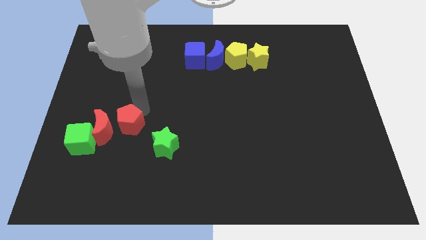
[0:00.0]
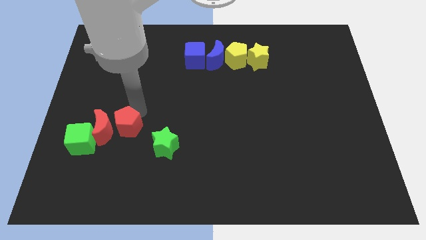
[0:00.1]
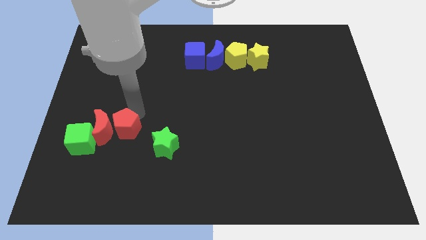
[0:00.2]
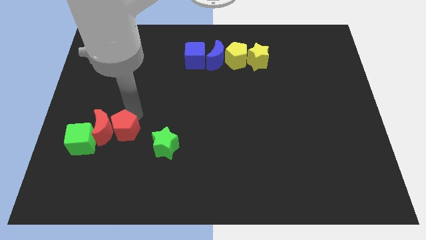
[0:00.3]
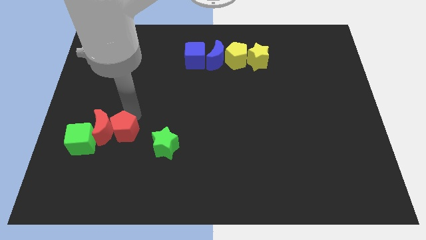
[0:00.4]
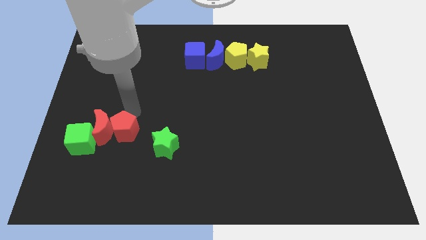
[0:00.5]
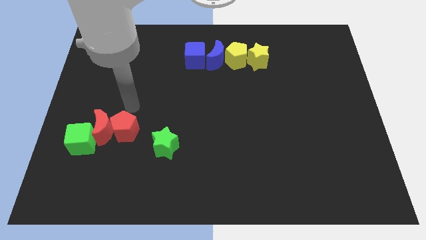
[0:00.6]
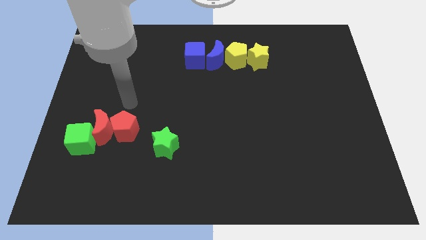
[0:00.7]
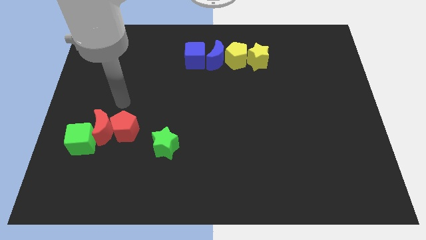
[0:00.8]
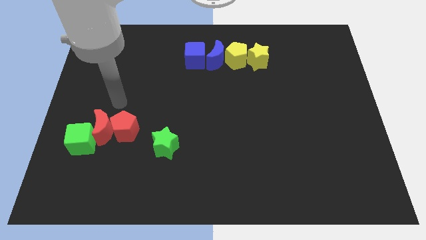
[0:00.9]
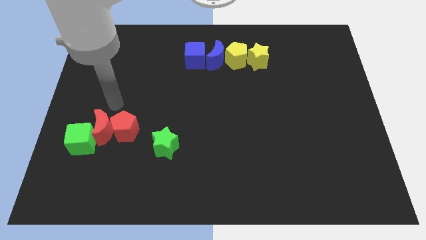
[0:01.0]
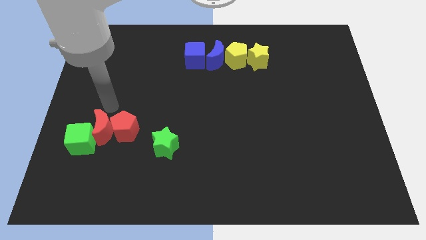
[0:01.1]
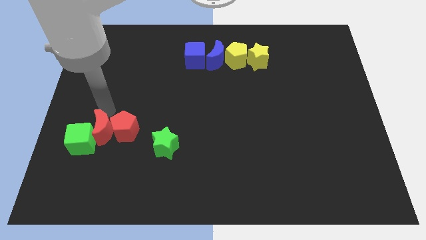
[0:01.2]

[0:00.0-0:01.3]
push the red pentagon close to the red crescent

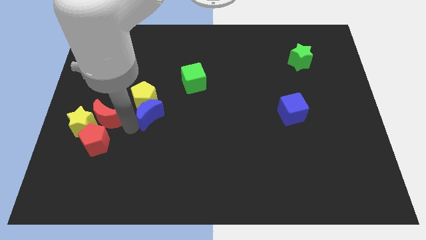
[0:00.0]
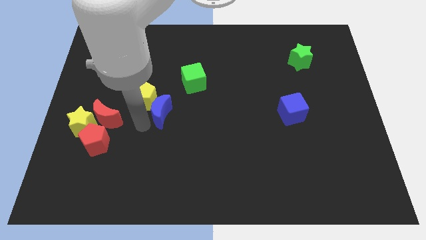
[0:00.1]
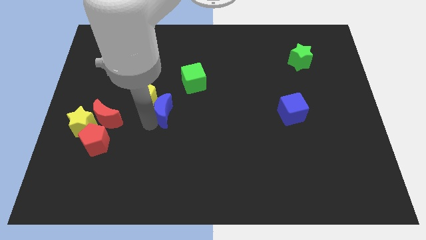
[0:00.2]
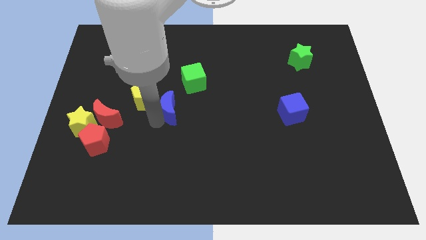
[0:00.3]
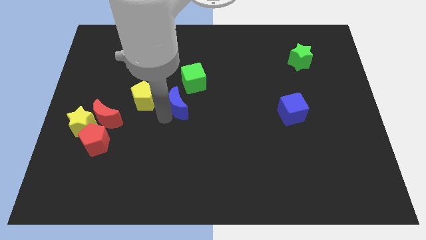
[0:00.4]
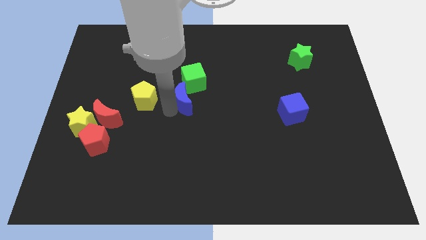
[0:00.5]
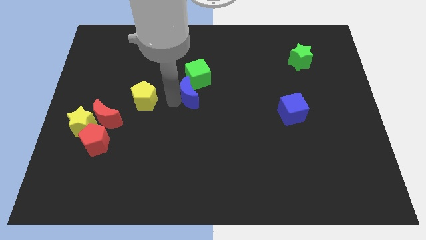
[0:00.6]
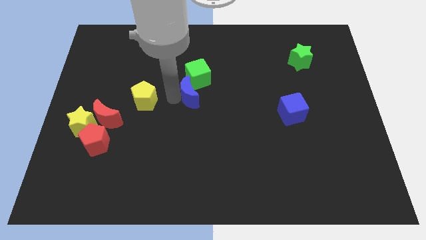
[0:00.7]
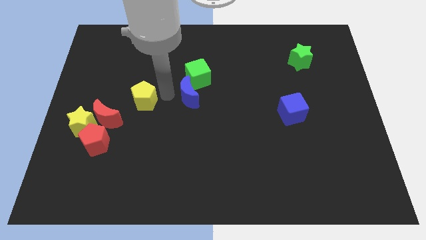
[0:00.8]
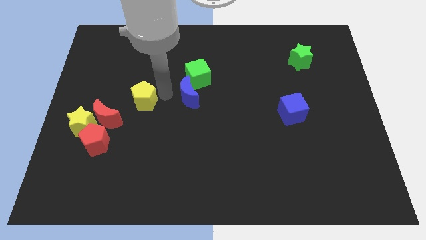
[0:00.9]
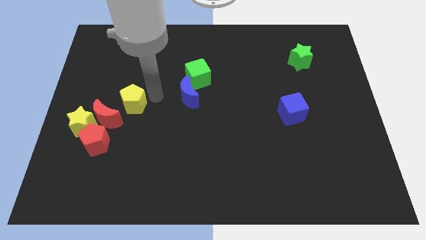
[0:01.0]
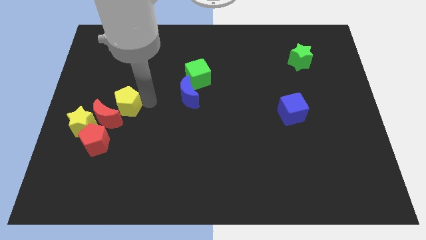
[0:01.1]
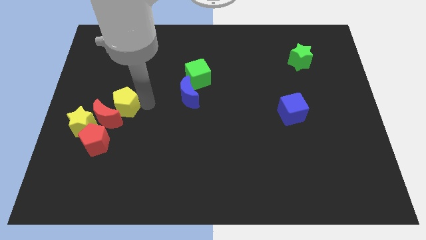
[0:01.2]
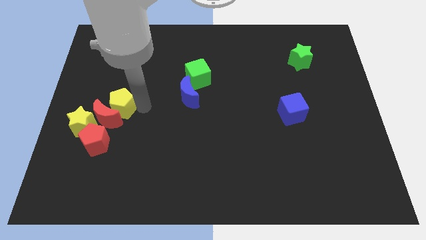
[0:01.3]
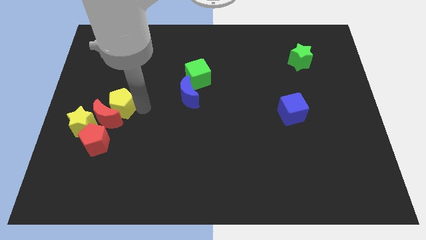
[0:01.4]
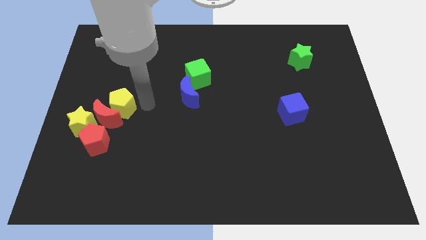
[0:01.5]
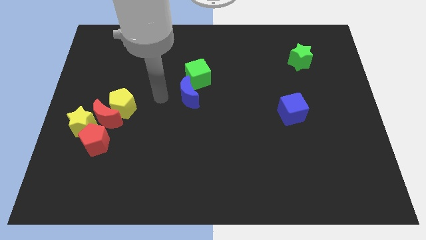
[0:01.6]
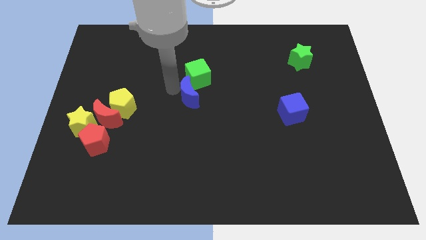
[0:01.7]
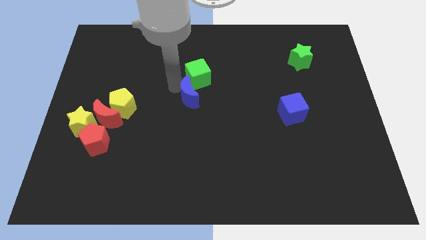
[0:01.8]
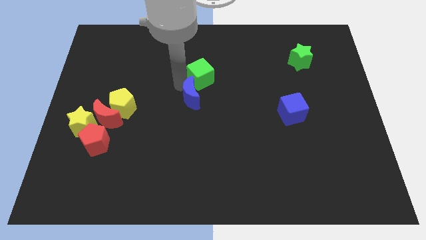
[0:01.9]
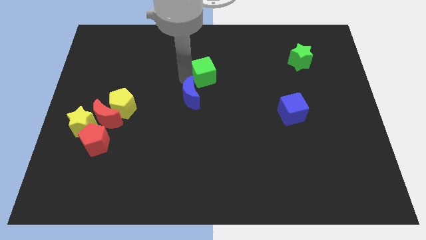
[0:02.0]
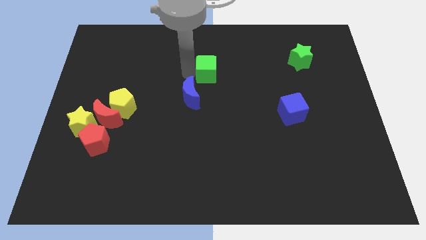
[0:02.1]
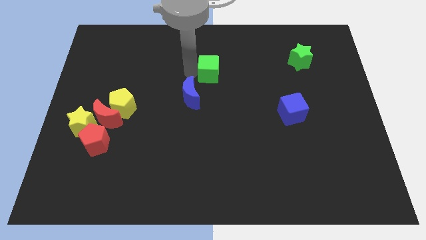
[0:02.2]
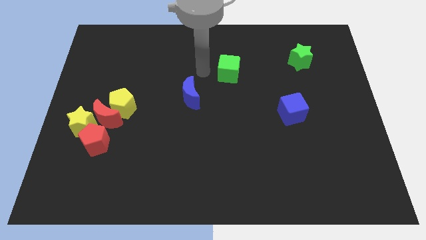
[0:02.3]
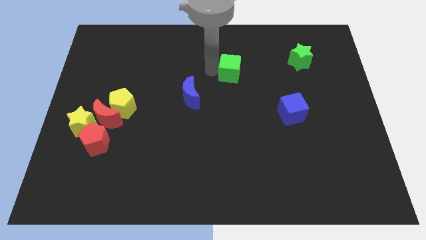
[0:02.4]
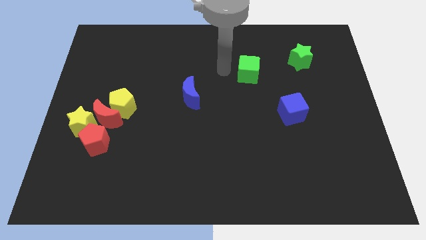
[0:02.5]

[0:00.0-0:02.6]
push the yellow pentagon towards the red moon

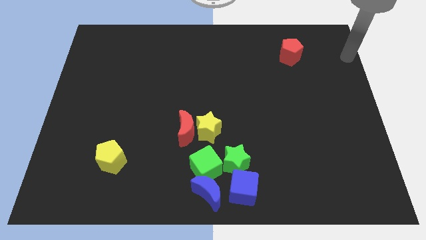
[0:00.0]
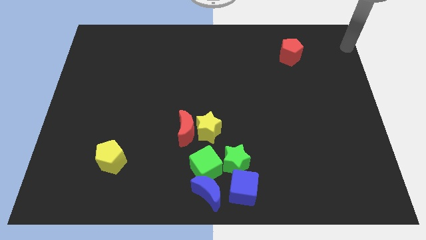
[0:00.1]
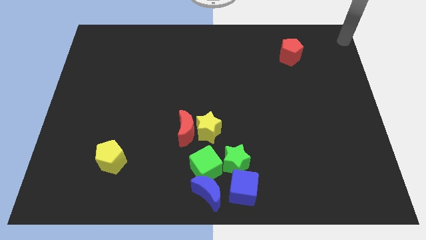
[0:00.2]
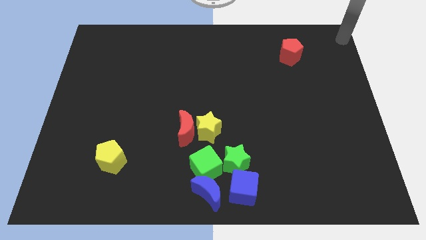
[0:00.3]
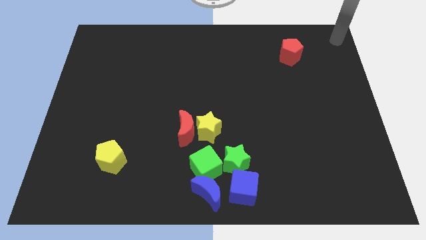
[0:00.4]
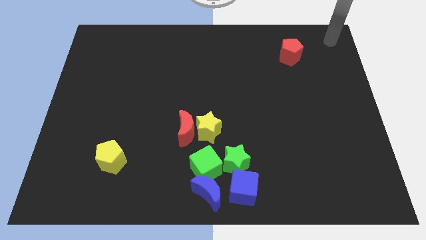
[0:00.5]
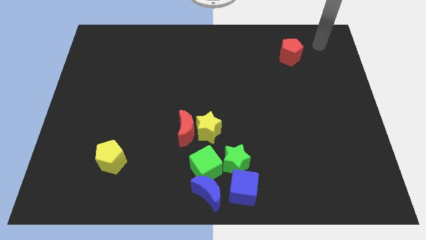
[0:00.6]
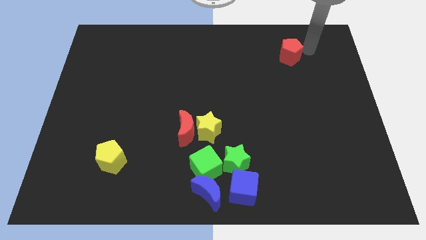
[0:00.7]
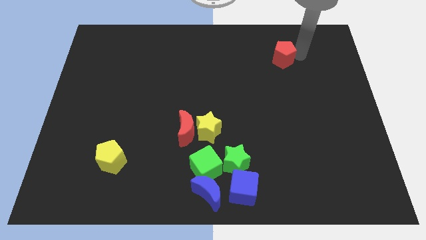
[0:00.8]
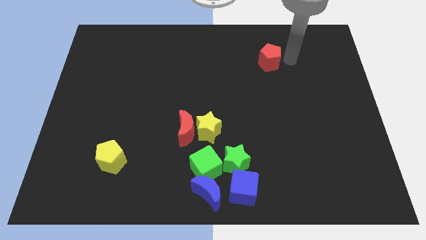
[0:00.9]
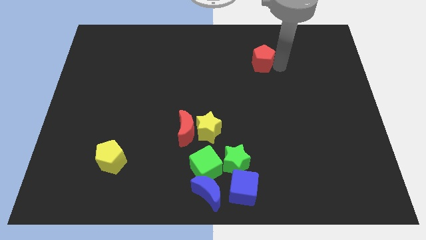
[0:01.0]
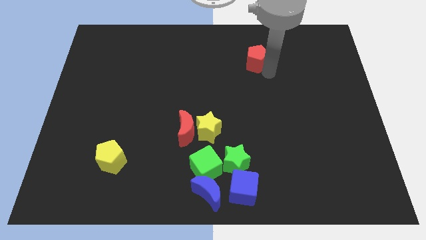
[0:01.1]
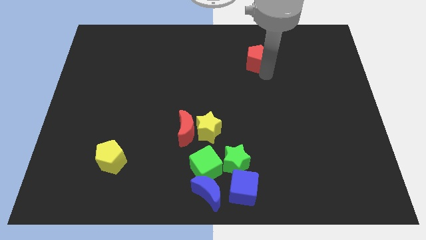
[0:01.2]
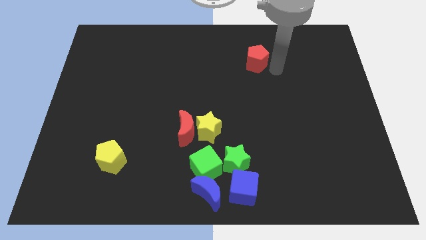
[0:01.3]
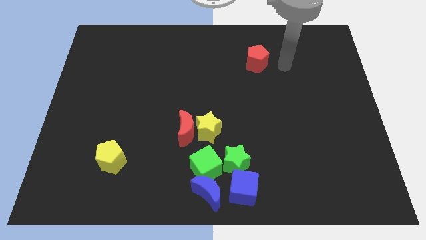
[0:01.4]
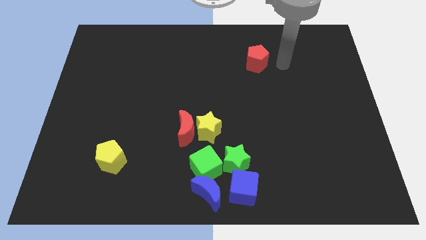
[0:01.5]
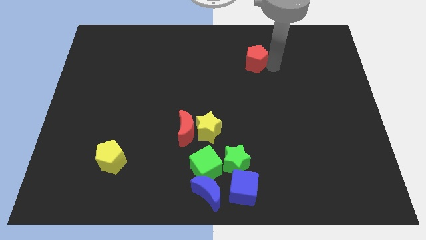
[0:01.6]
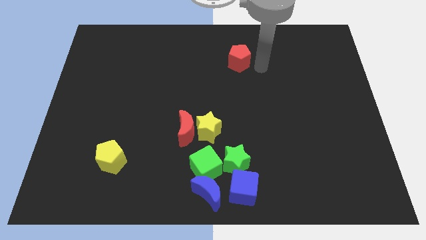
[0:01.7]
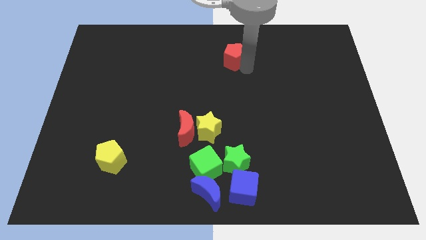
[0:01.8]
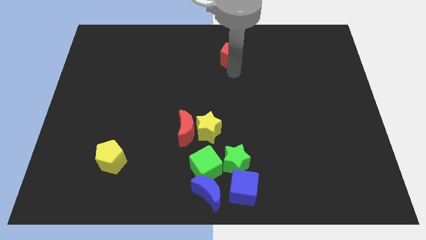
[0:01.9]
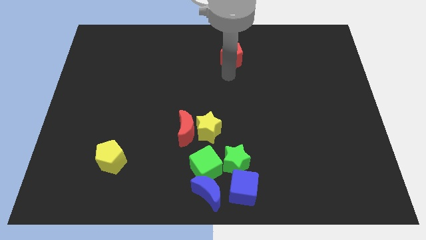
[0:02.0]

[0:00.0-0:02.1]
place the red pentagon vertically above the green star

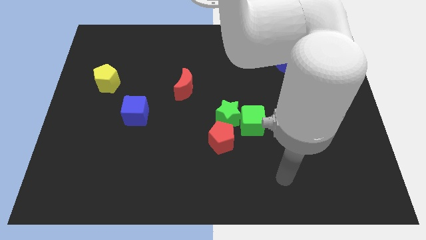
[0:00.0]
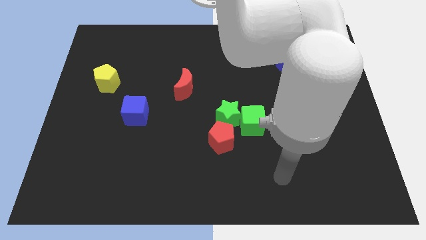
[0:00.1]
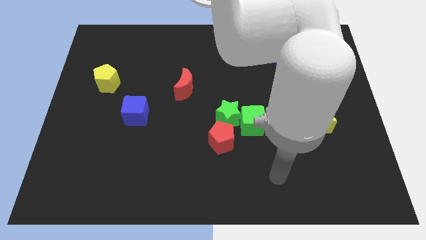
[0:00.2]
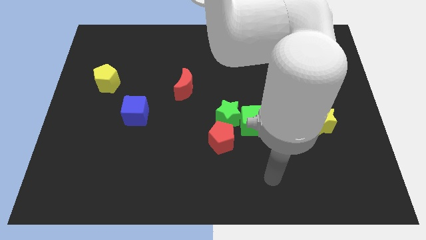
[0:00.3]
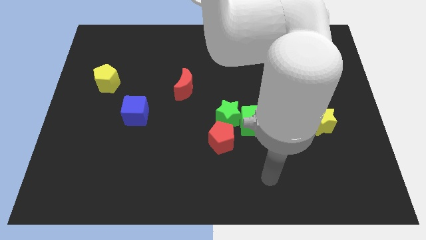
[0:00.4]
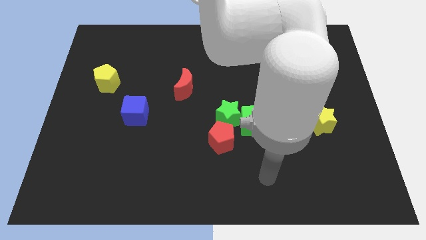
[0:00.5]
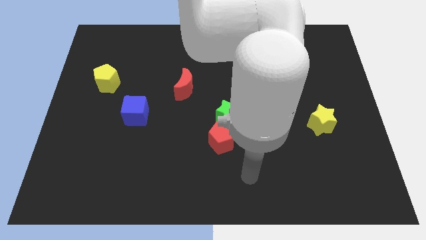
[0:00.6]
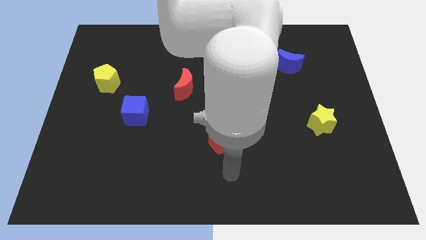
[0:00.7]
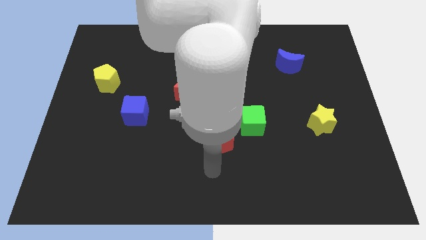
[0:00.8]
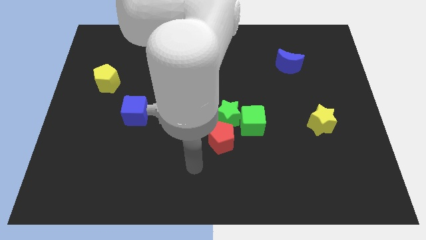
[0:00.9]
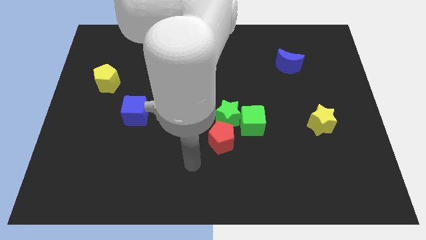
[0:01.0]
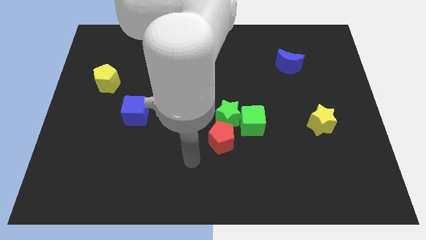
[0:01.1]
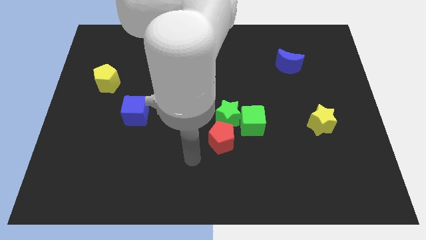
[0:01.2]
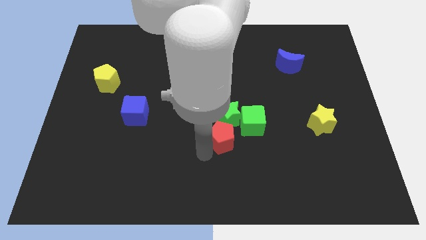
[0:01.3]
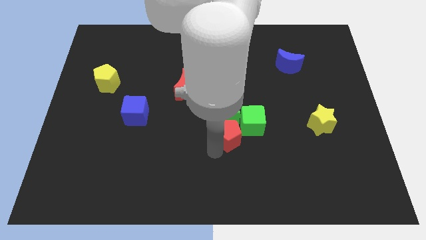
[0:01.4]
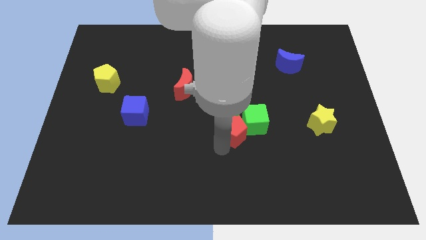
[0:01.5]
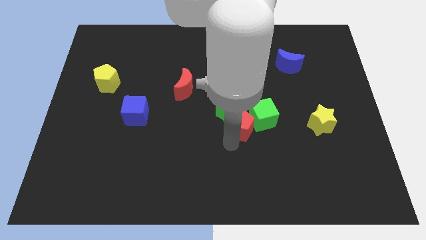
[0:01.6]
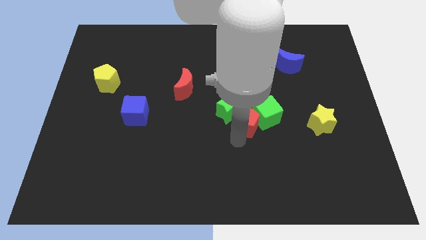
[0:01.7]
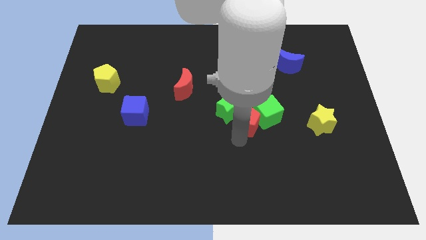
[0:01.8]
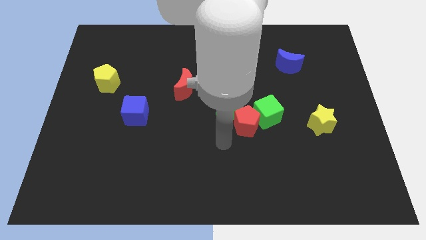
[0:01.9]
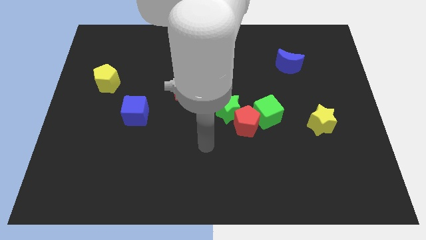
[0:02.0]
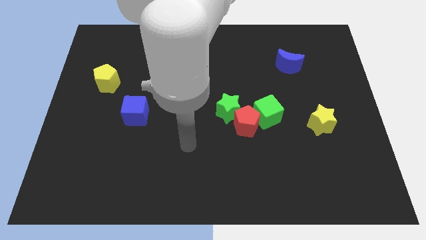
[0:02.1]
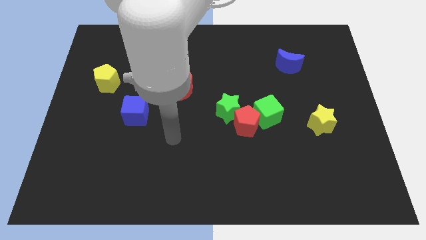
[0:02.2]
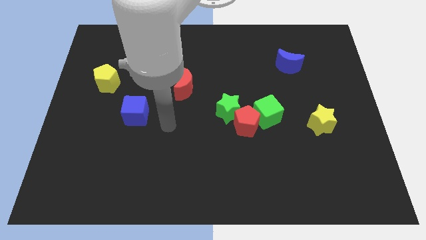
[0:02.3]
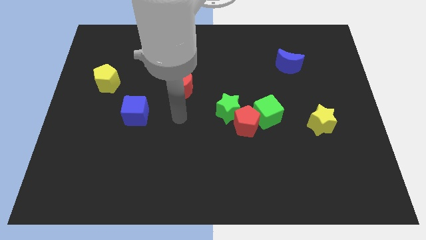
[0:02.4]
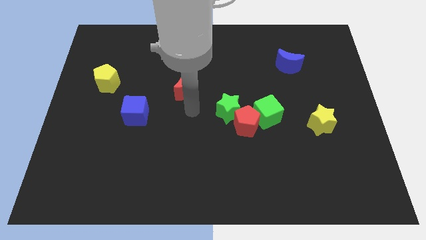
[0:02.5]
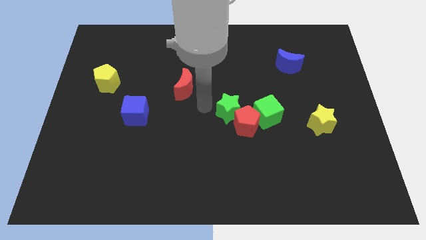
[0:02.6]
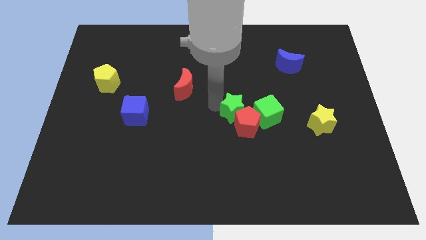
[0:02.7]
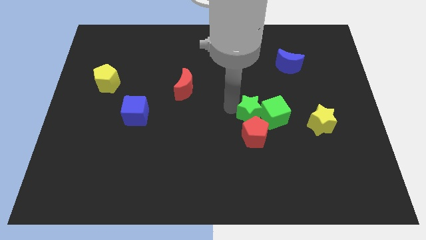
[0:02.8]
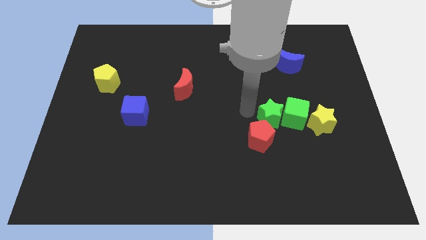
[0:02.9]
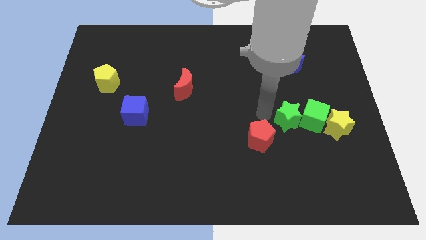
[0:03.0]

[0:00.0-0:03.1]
push the red pentagon and the green star into the green cube and the yellow star
